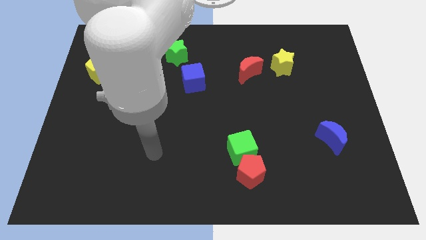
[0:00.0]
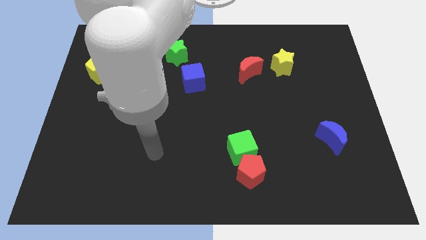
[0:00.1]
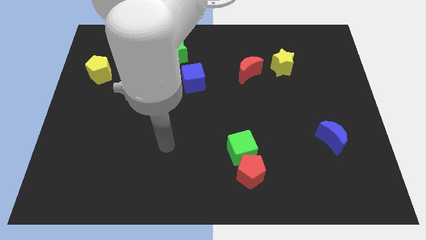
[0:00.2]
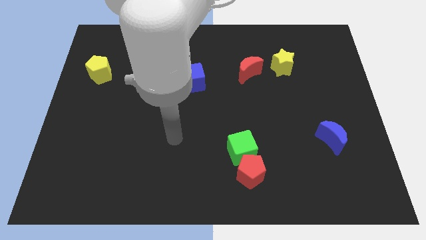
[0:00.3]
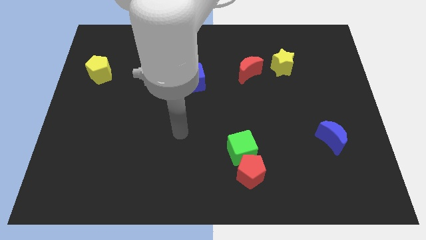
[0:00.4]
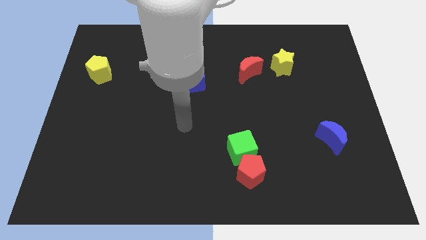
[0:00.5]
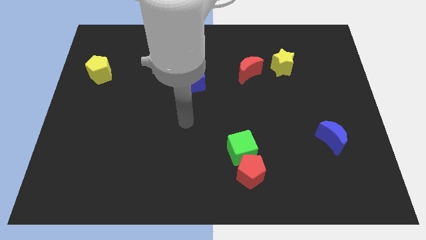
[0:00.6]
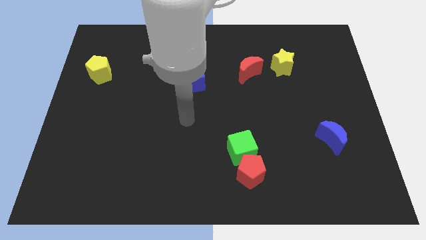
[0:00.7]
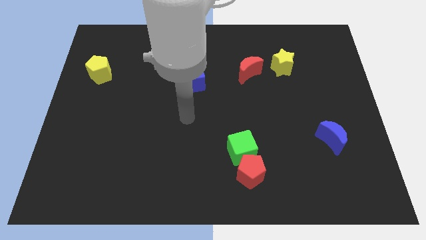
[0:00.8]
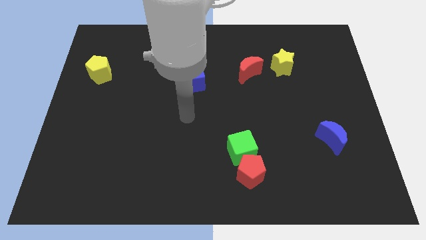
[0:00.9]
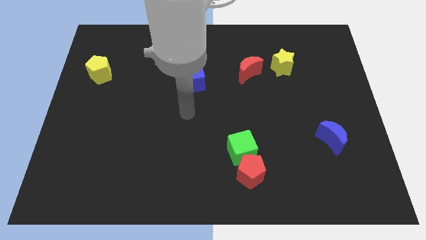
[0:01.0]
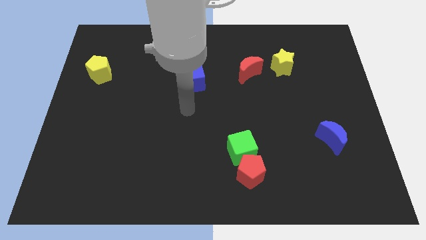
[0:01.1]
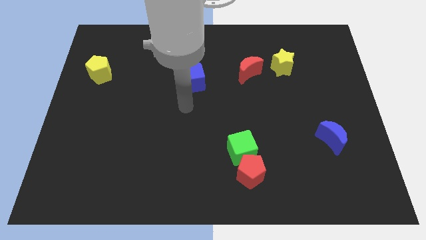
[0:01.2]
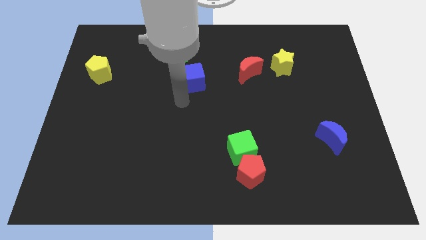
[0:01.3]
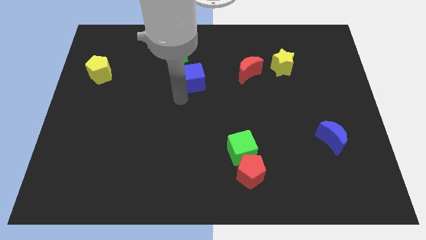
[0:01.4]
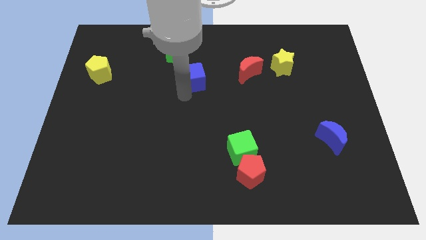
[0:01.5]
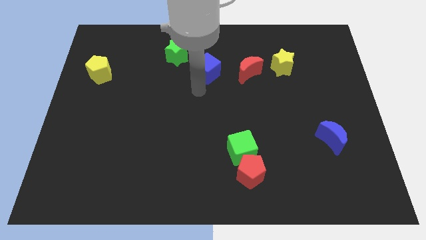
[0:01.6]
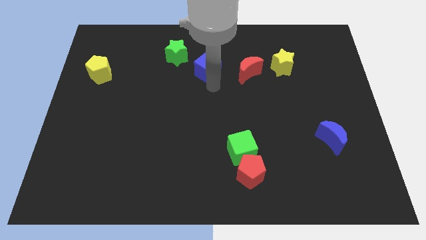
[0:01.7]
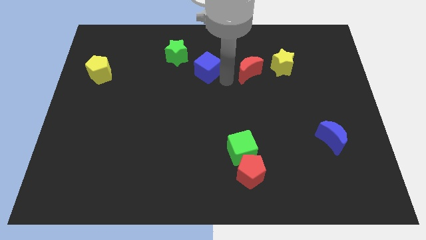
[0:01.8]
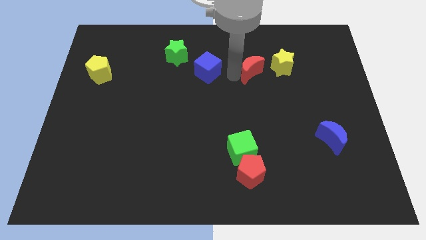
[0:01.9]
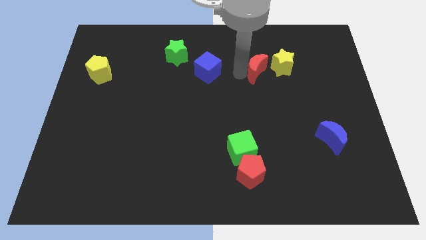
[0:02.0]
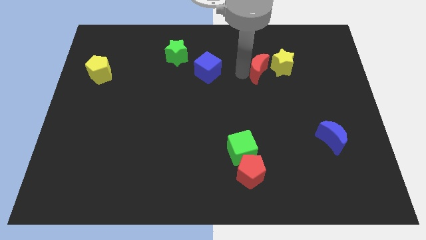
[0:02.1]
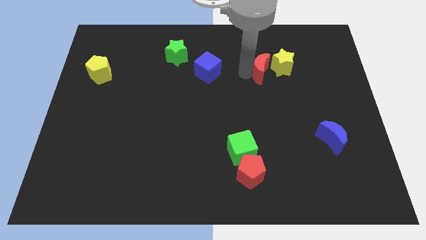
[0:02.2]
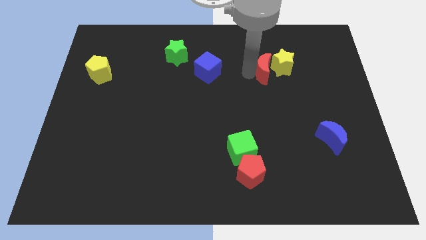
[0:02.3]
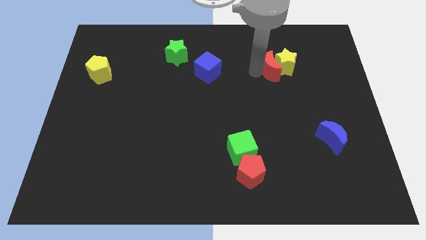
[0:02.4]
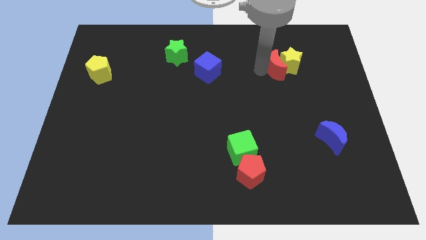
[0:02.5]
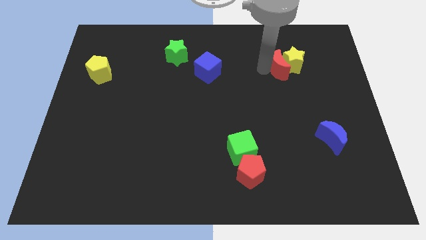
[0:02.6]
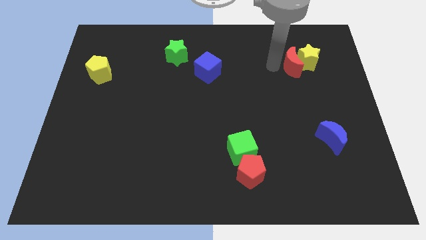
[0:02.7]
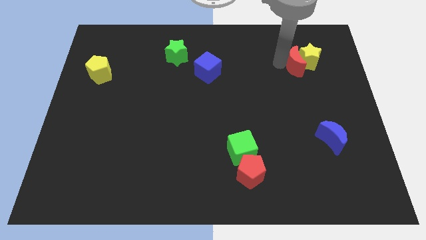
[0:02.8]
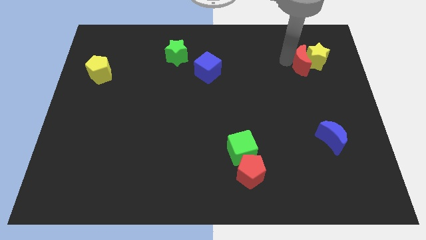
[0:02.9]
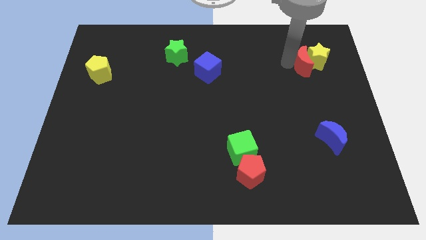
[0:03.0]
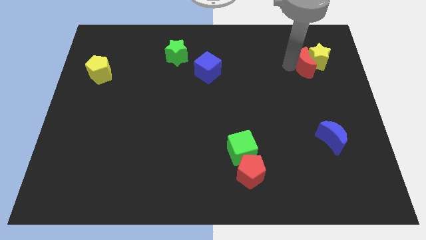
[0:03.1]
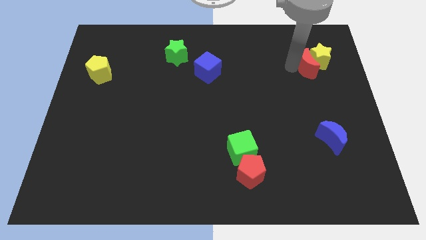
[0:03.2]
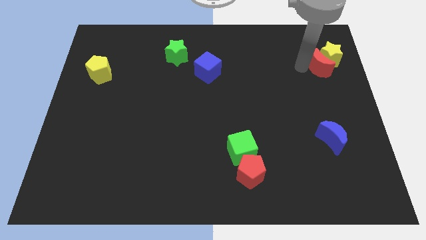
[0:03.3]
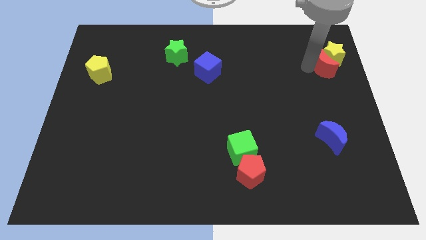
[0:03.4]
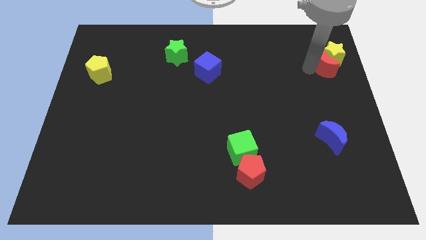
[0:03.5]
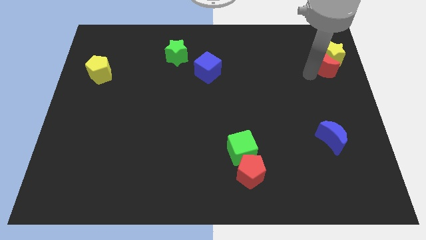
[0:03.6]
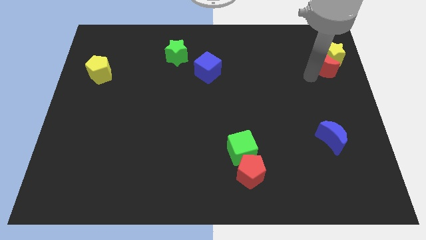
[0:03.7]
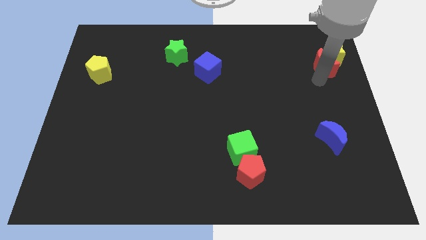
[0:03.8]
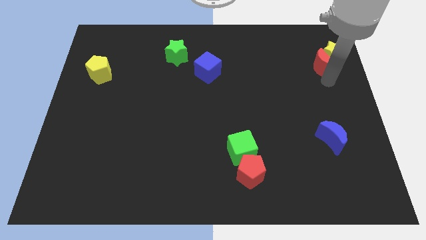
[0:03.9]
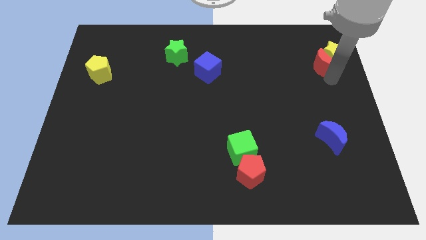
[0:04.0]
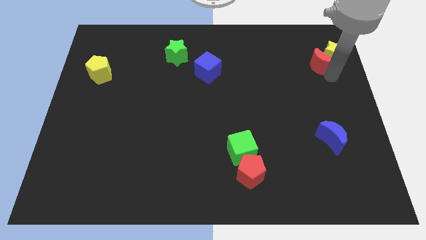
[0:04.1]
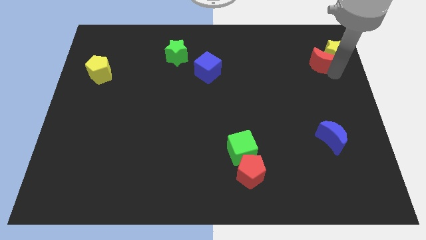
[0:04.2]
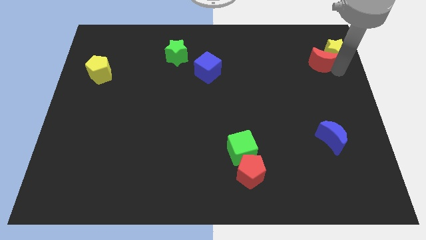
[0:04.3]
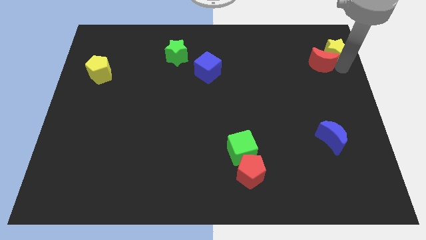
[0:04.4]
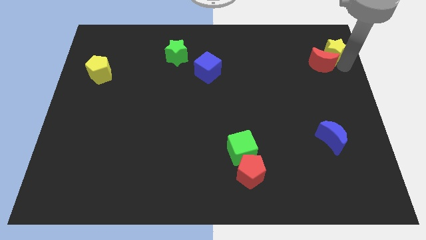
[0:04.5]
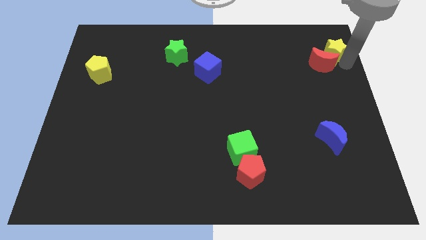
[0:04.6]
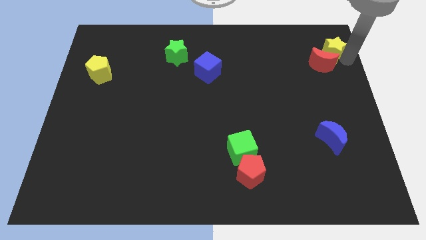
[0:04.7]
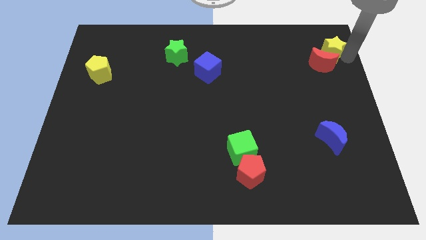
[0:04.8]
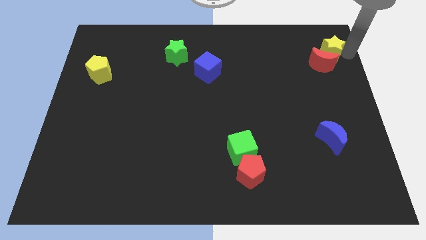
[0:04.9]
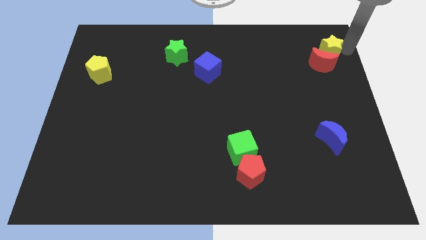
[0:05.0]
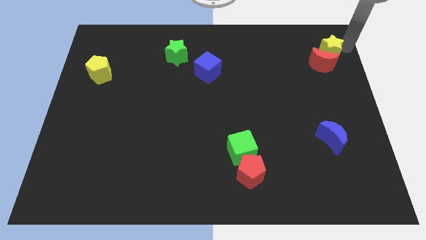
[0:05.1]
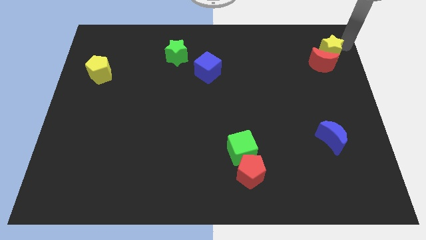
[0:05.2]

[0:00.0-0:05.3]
slightly touch right to the yellow star

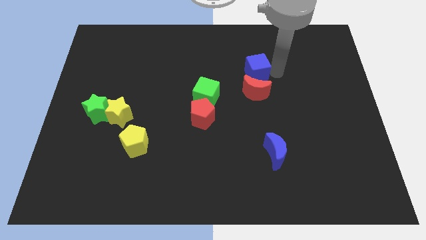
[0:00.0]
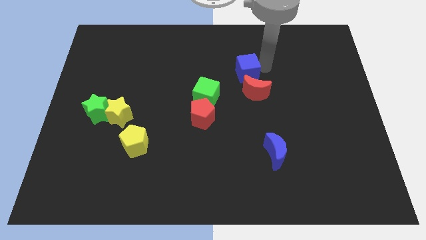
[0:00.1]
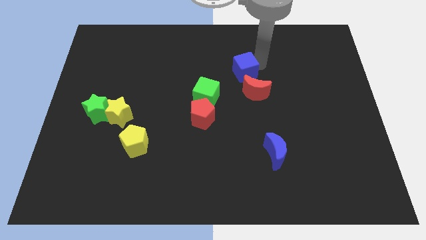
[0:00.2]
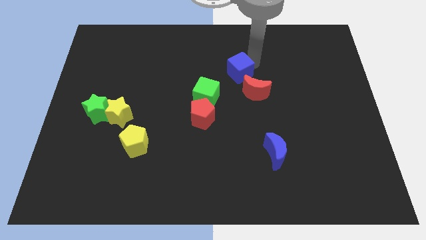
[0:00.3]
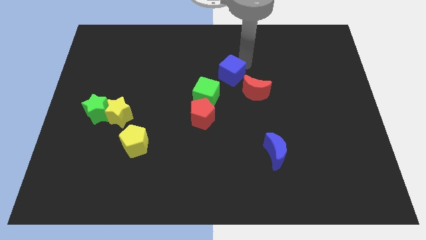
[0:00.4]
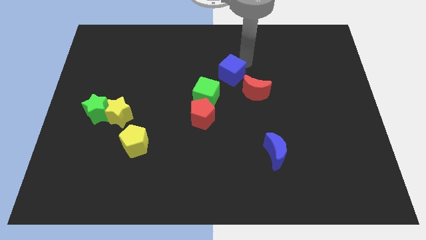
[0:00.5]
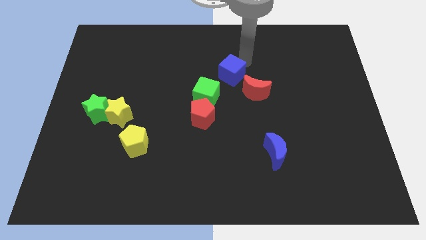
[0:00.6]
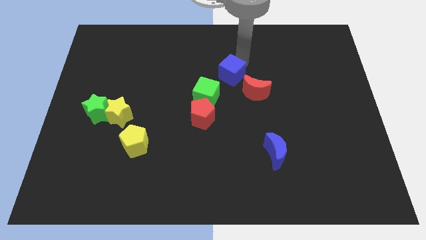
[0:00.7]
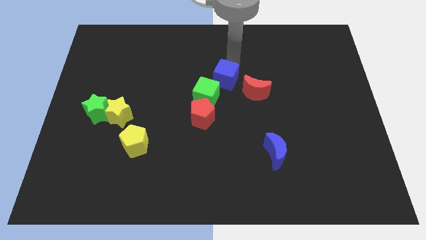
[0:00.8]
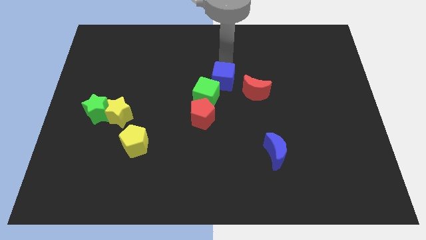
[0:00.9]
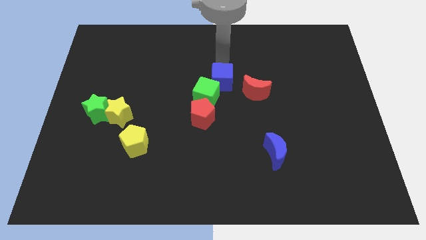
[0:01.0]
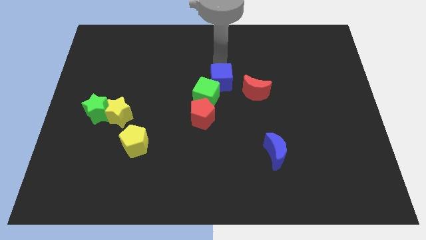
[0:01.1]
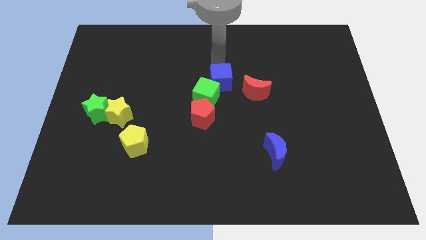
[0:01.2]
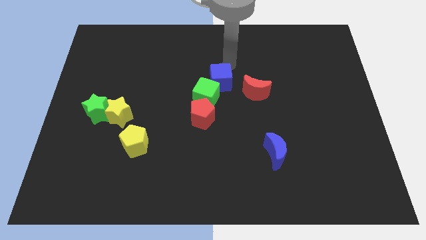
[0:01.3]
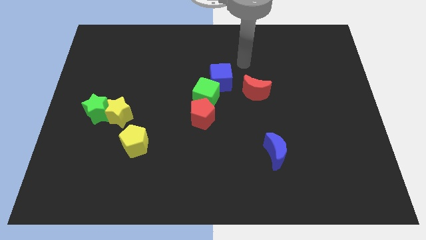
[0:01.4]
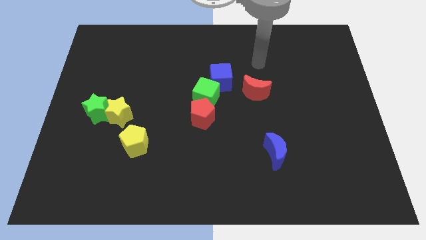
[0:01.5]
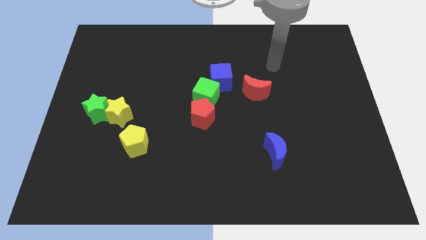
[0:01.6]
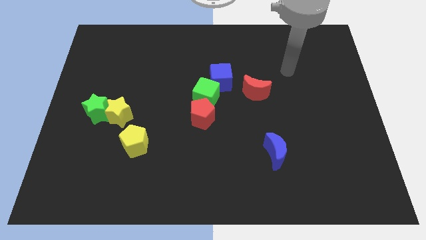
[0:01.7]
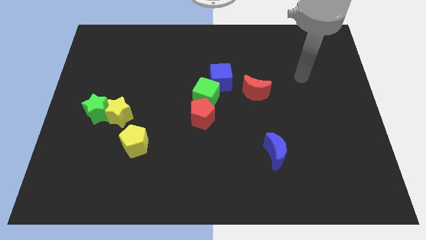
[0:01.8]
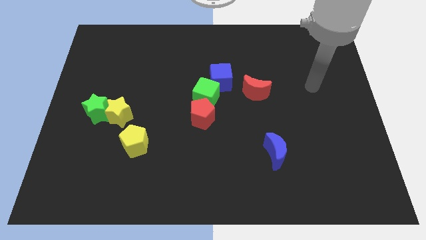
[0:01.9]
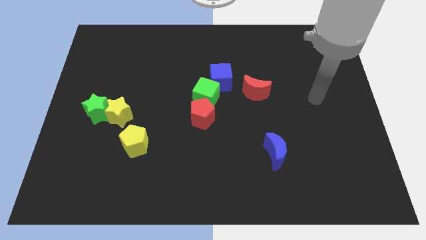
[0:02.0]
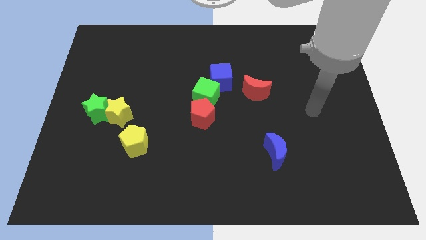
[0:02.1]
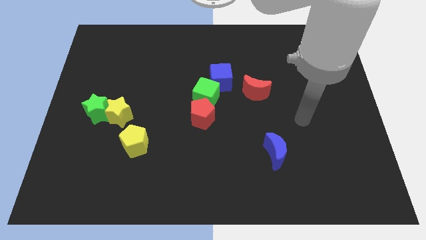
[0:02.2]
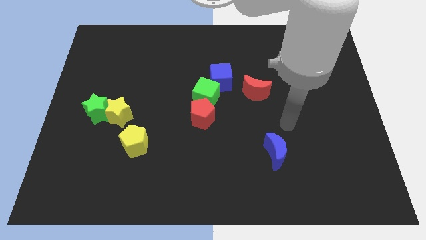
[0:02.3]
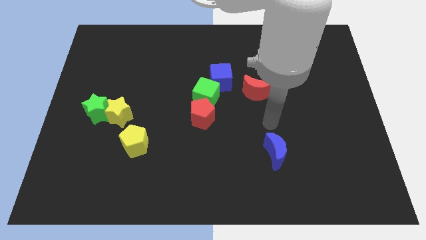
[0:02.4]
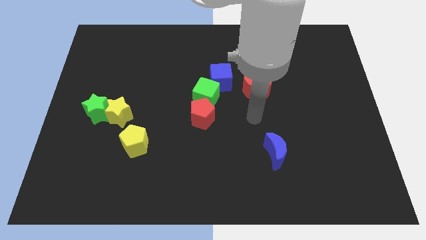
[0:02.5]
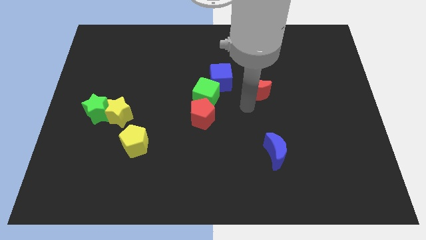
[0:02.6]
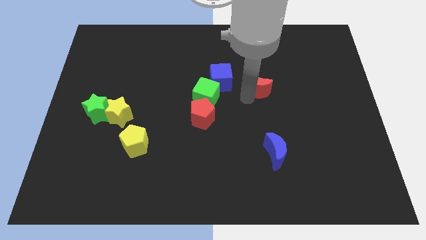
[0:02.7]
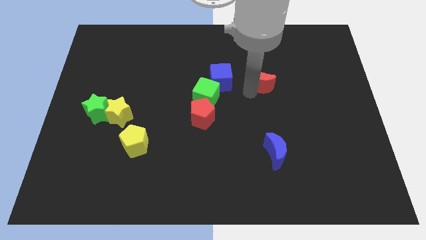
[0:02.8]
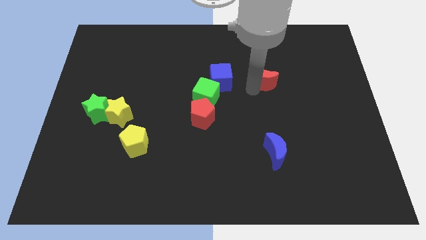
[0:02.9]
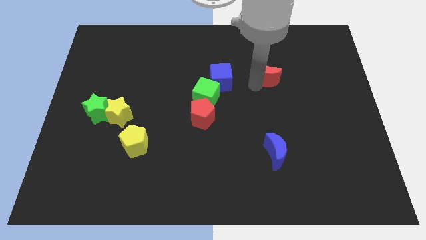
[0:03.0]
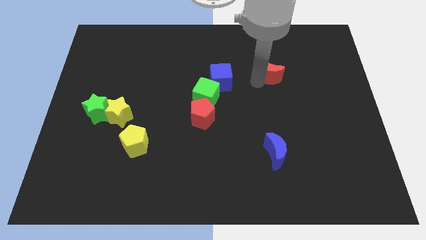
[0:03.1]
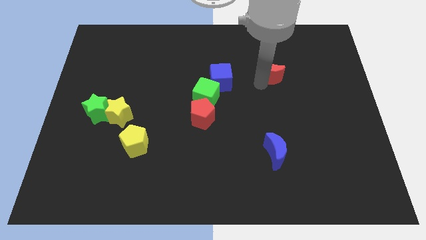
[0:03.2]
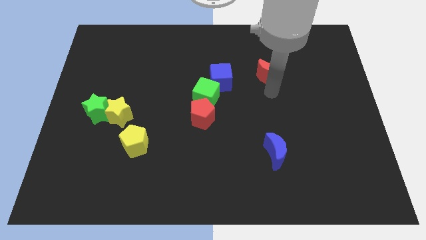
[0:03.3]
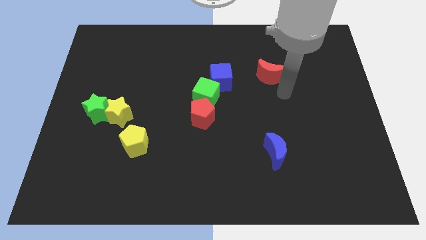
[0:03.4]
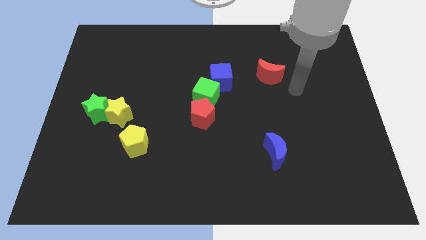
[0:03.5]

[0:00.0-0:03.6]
push the red moon to the right side of the blue cube

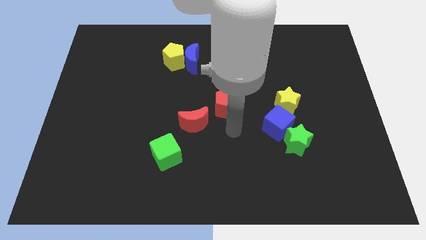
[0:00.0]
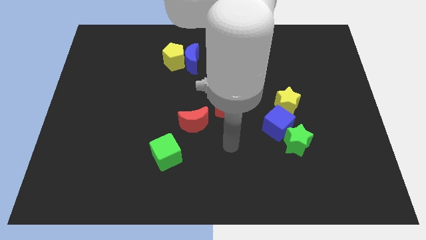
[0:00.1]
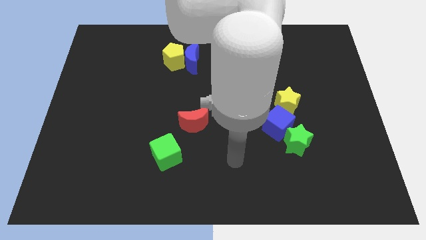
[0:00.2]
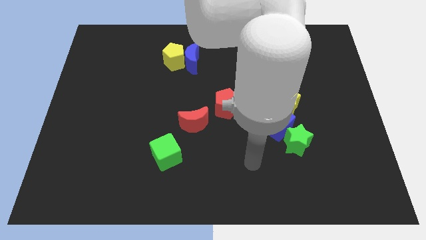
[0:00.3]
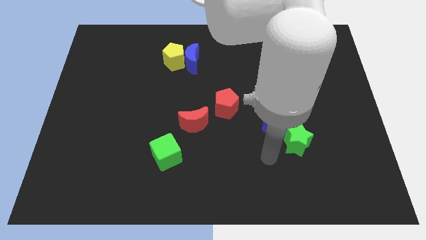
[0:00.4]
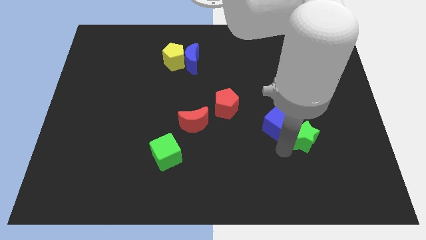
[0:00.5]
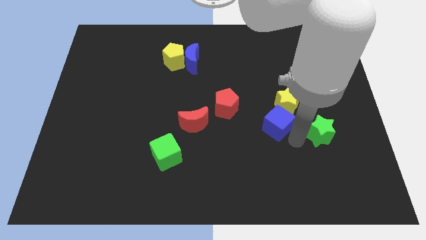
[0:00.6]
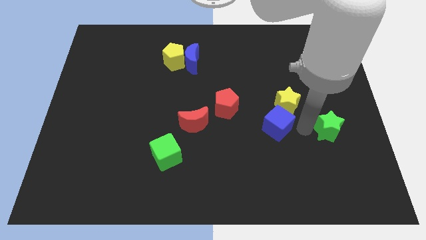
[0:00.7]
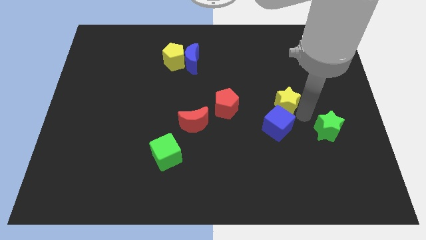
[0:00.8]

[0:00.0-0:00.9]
push the green star towards the right side of the board
